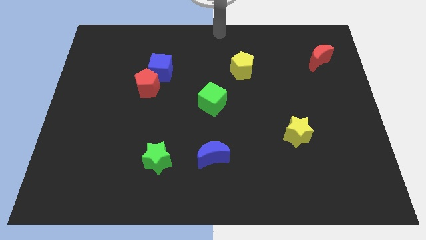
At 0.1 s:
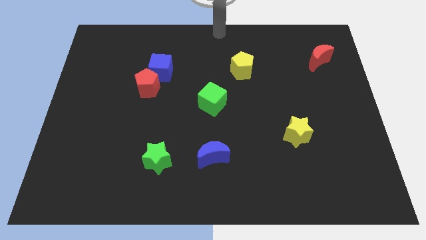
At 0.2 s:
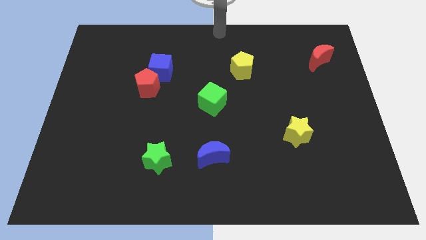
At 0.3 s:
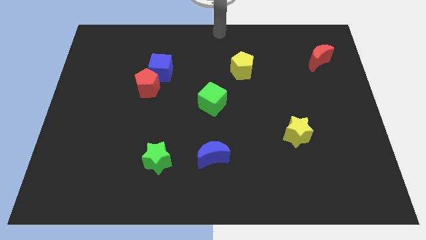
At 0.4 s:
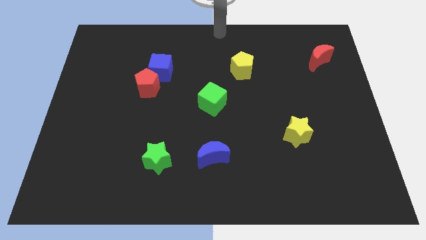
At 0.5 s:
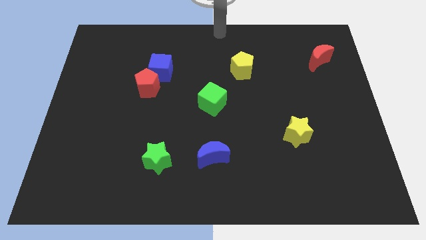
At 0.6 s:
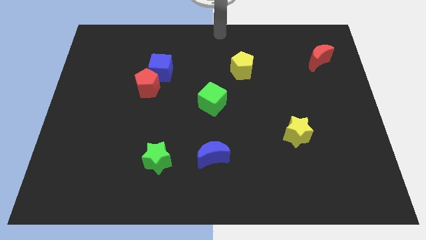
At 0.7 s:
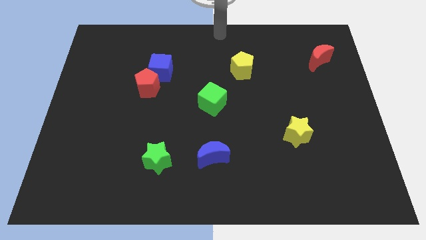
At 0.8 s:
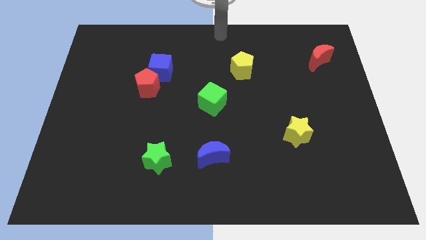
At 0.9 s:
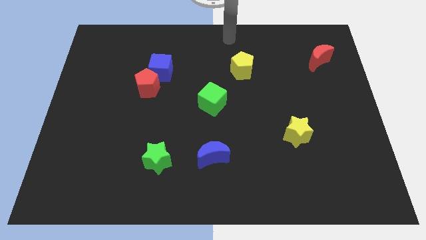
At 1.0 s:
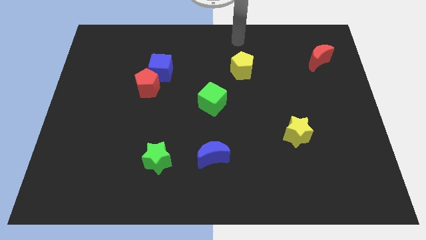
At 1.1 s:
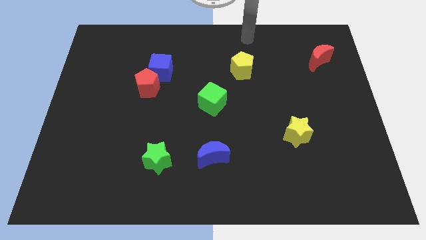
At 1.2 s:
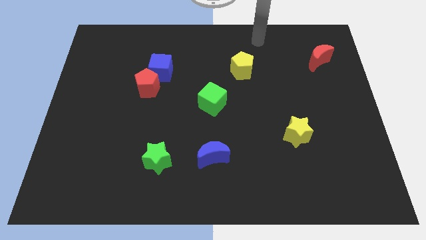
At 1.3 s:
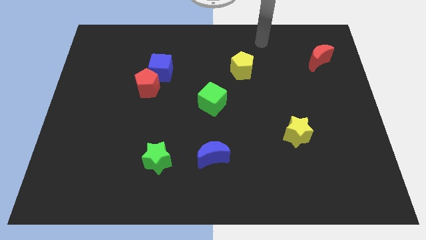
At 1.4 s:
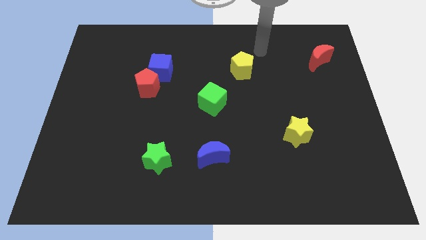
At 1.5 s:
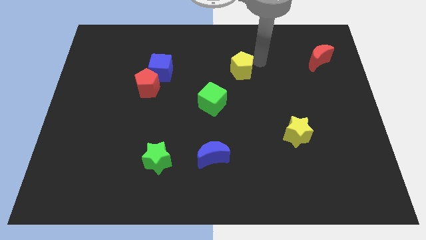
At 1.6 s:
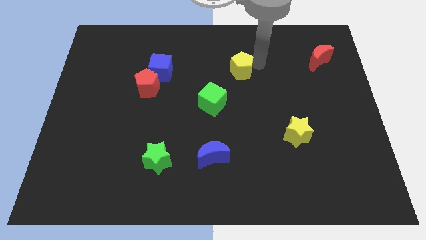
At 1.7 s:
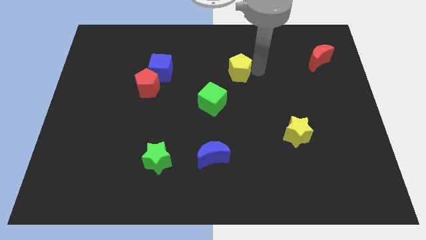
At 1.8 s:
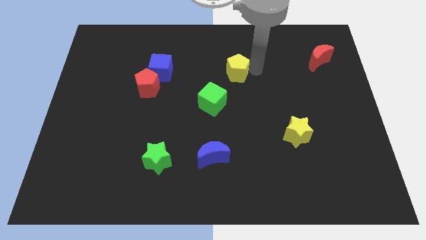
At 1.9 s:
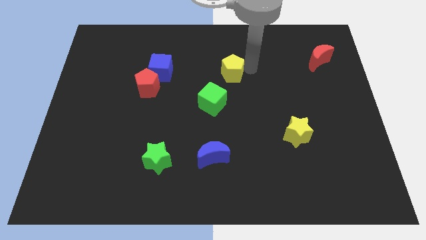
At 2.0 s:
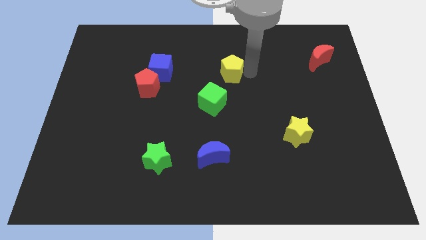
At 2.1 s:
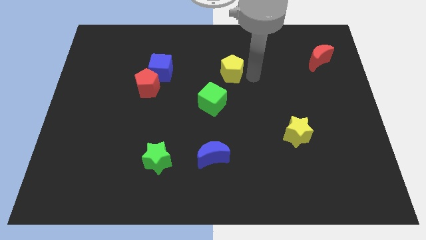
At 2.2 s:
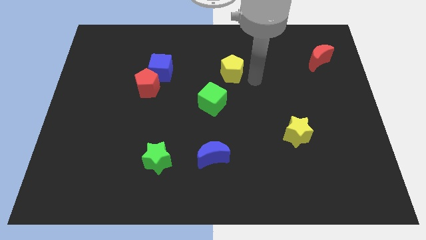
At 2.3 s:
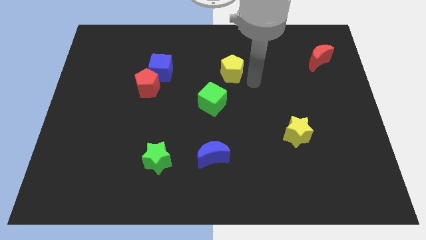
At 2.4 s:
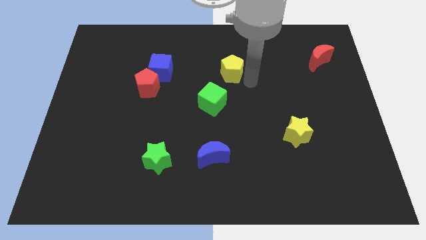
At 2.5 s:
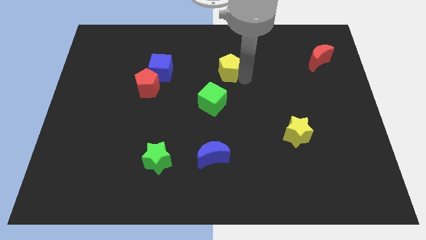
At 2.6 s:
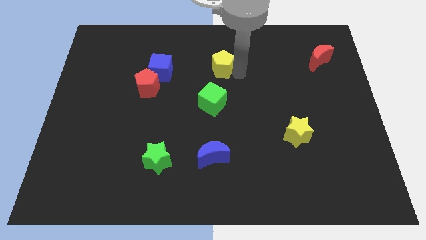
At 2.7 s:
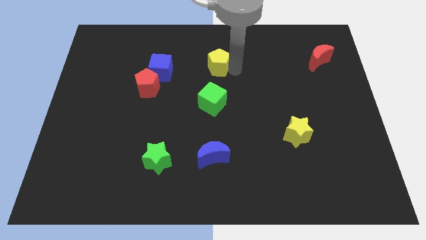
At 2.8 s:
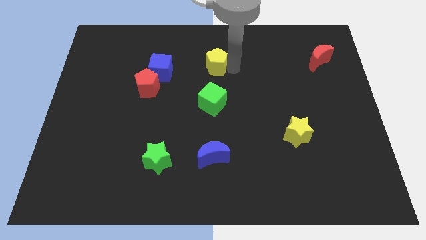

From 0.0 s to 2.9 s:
push the yellow pentagon to the top of the green cube

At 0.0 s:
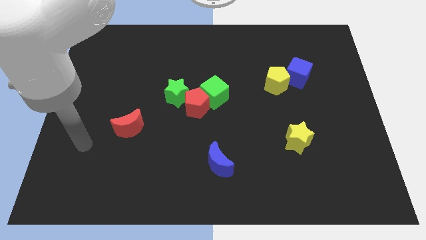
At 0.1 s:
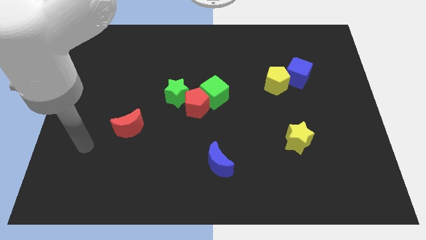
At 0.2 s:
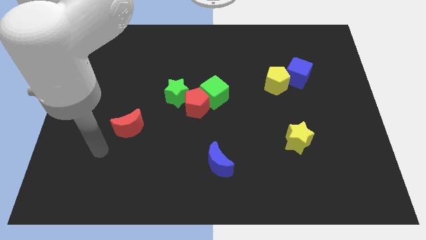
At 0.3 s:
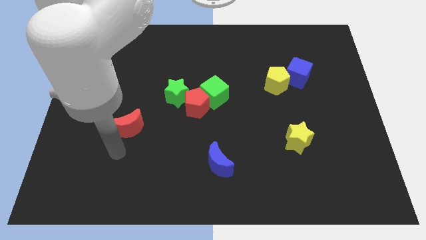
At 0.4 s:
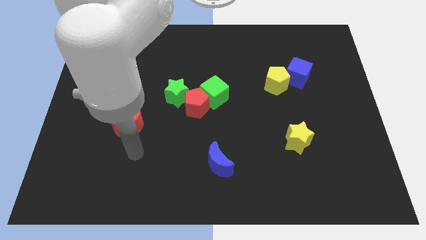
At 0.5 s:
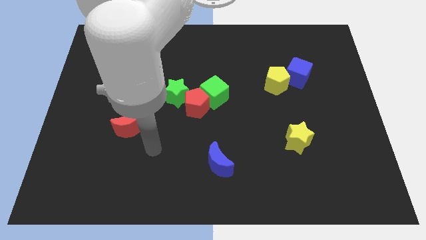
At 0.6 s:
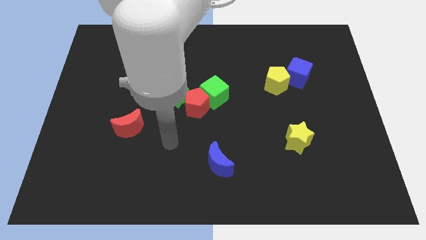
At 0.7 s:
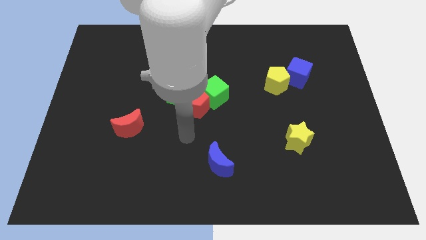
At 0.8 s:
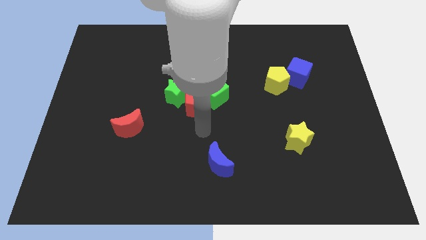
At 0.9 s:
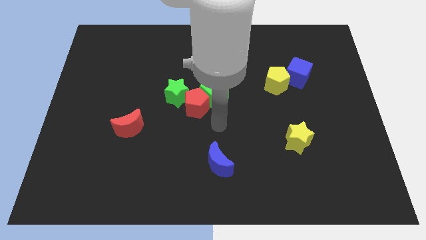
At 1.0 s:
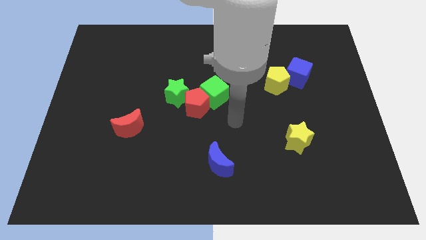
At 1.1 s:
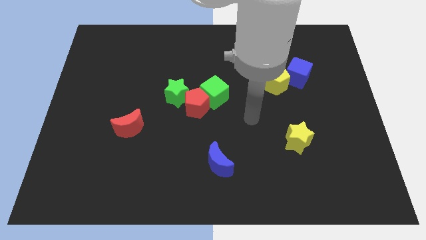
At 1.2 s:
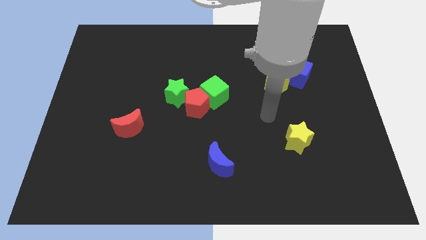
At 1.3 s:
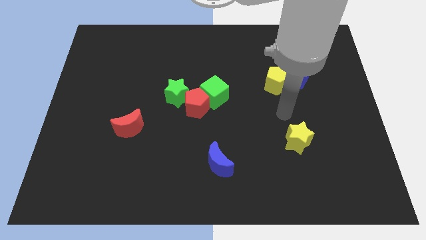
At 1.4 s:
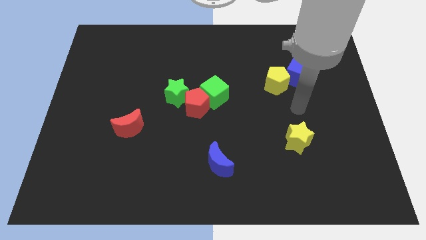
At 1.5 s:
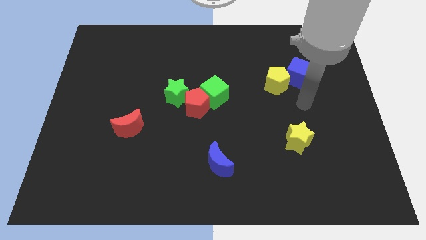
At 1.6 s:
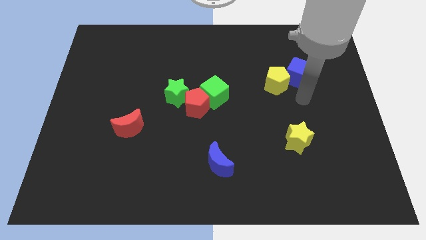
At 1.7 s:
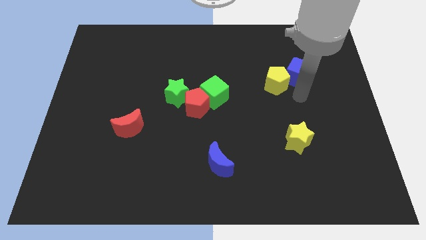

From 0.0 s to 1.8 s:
move the arm below the blue cube

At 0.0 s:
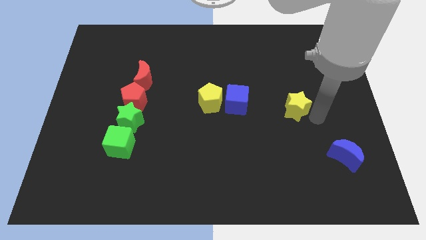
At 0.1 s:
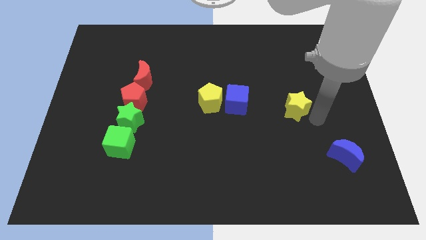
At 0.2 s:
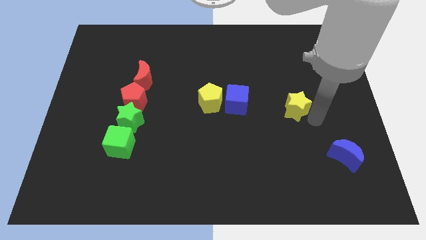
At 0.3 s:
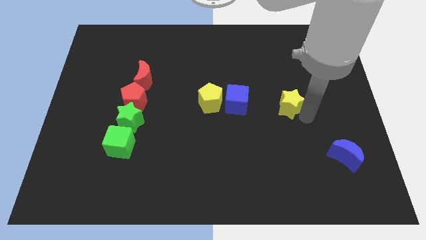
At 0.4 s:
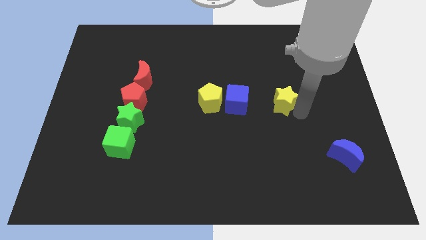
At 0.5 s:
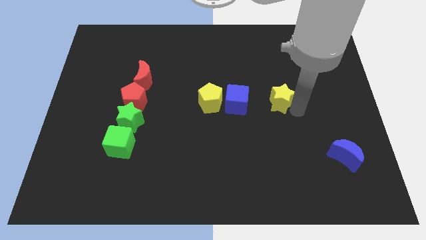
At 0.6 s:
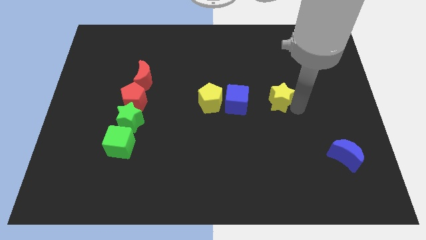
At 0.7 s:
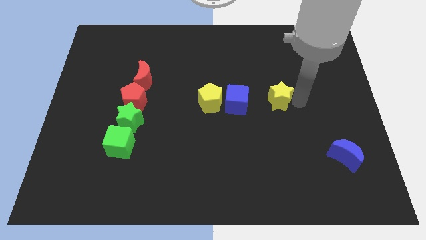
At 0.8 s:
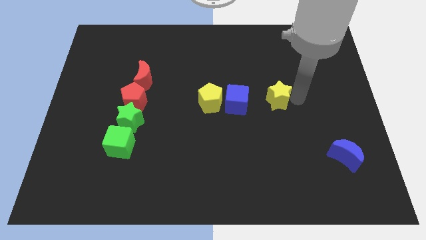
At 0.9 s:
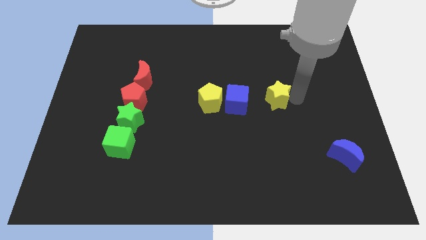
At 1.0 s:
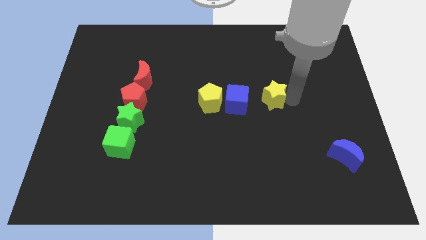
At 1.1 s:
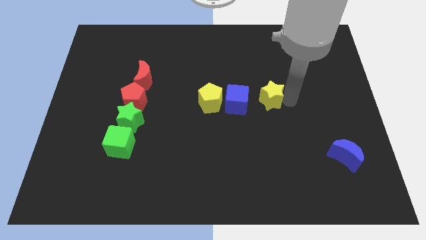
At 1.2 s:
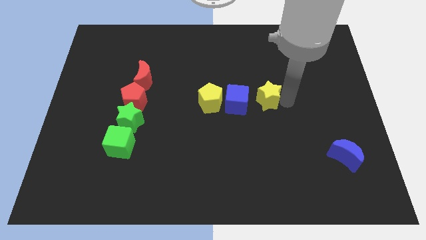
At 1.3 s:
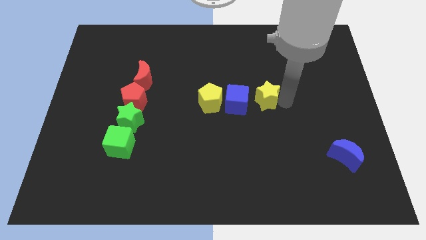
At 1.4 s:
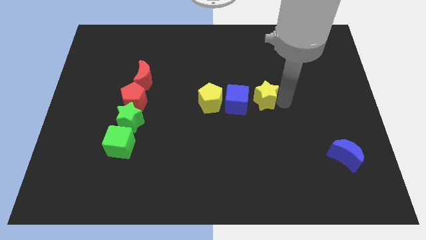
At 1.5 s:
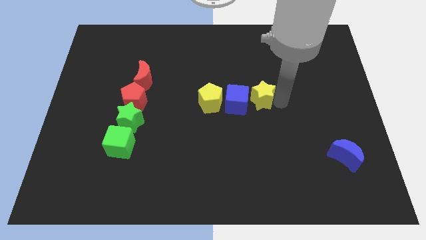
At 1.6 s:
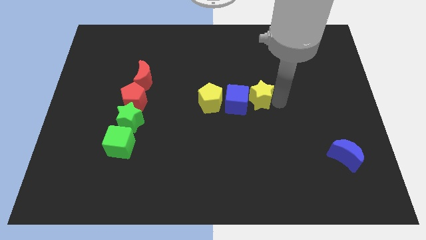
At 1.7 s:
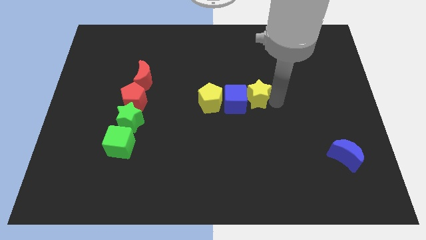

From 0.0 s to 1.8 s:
push the yellow star into the blue cube

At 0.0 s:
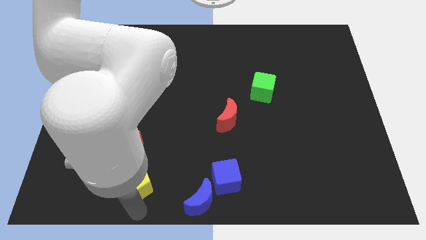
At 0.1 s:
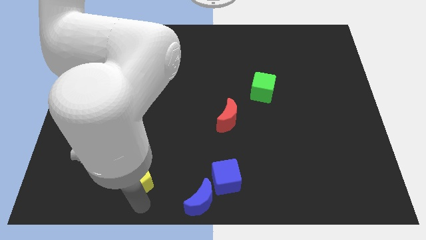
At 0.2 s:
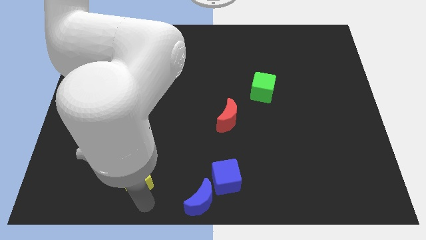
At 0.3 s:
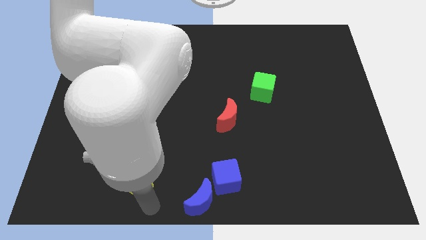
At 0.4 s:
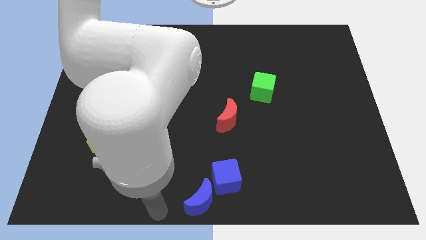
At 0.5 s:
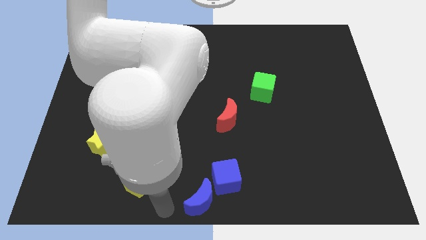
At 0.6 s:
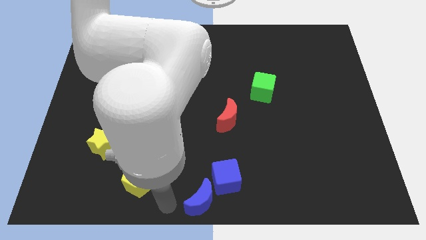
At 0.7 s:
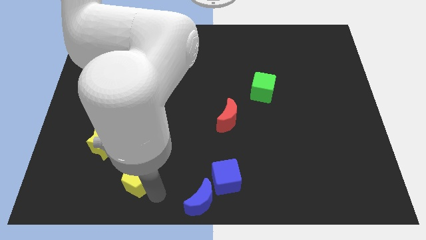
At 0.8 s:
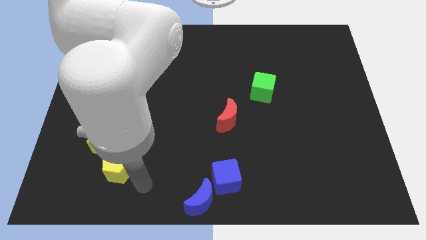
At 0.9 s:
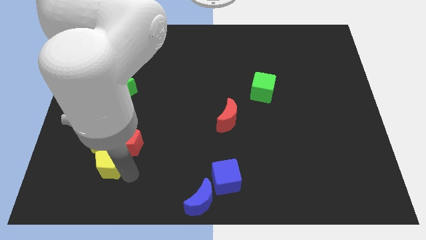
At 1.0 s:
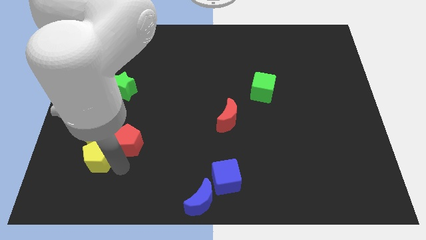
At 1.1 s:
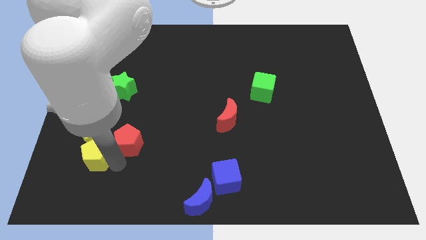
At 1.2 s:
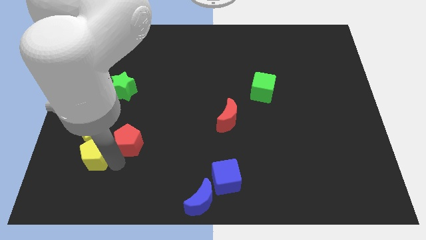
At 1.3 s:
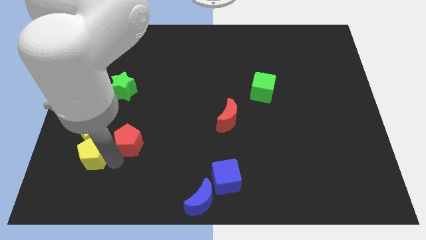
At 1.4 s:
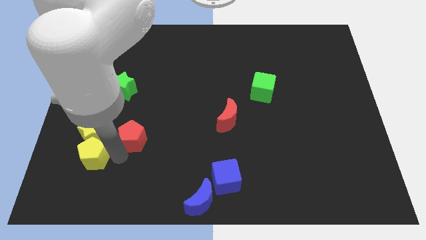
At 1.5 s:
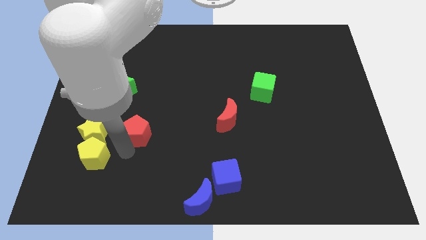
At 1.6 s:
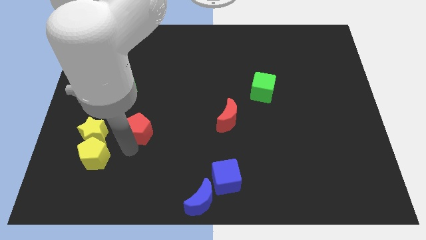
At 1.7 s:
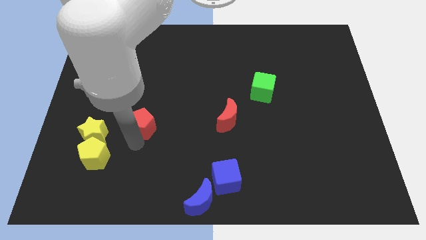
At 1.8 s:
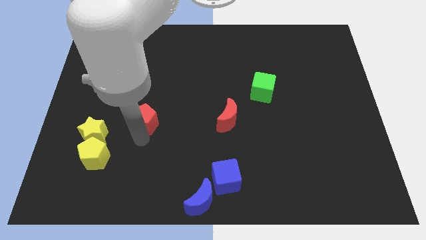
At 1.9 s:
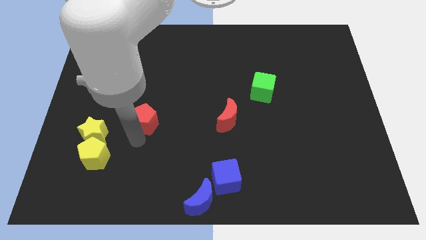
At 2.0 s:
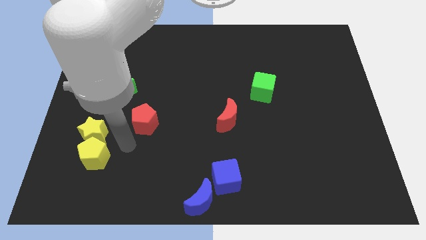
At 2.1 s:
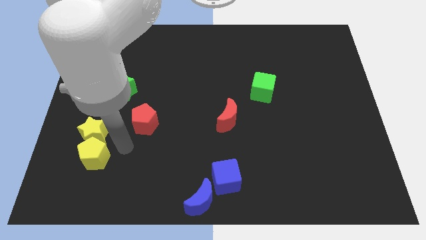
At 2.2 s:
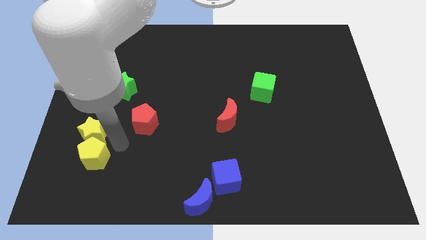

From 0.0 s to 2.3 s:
separate the yellow blocks from red pentagon
